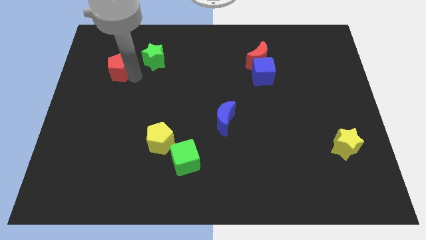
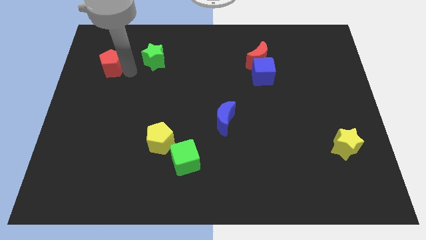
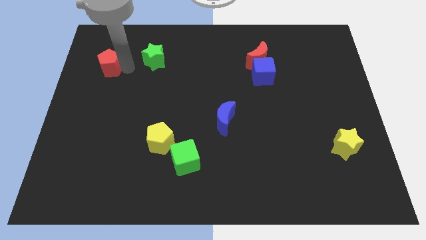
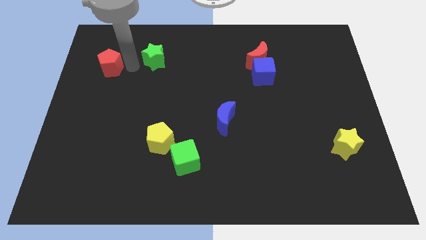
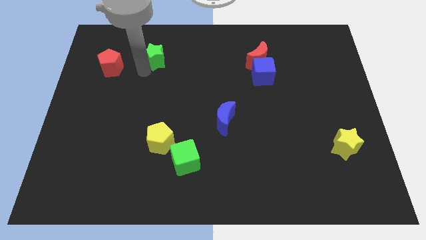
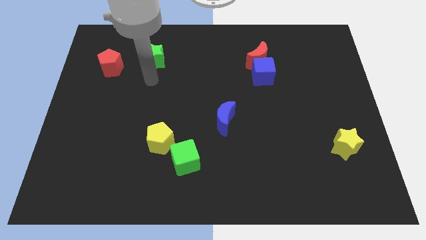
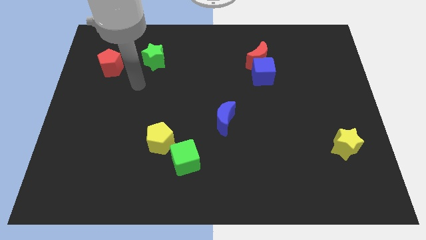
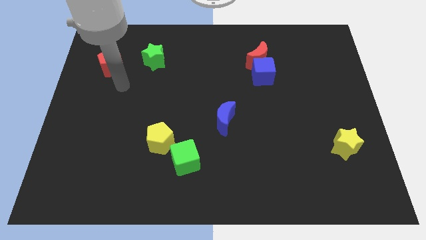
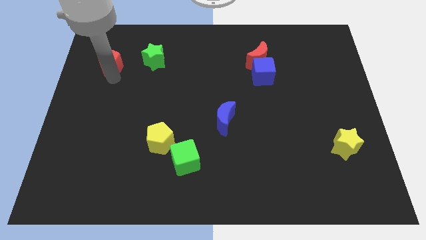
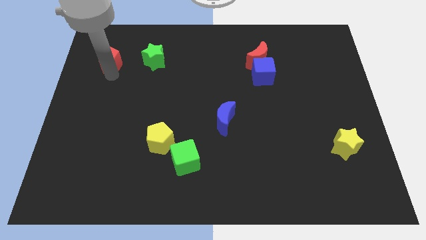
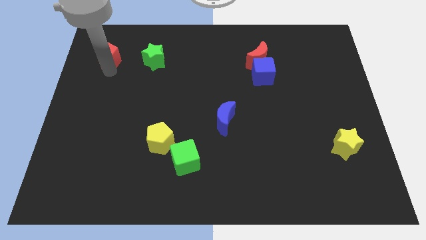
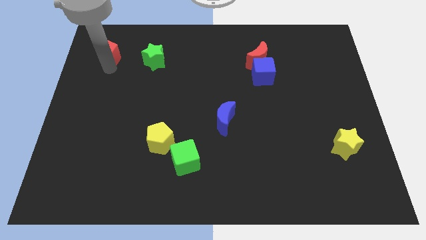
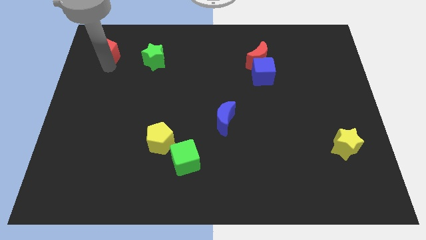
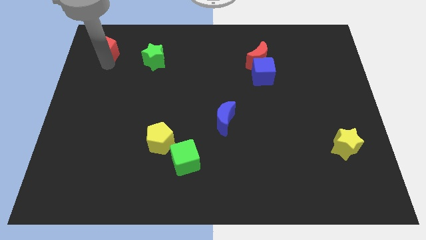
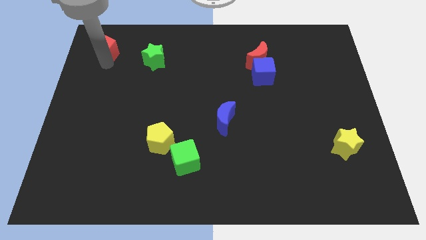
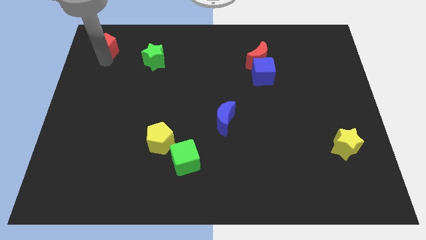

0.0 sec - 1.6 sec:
push the red pentagon slightly towards the top left side of the board

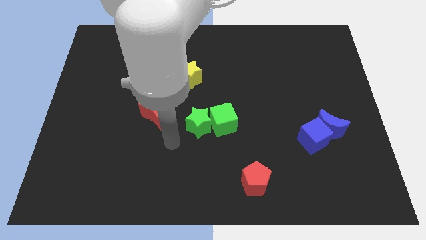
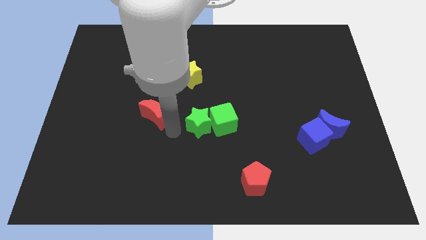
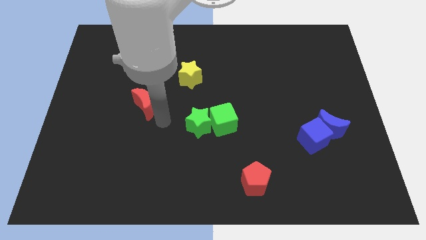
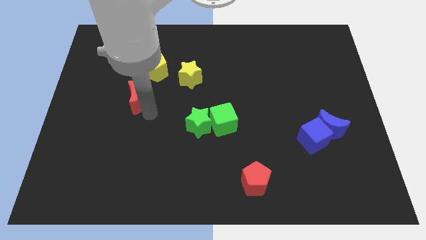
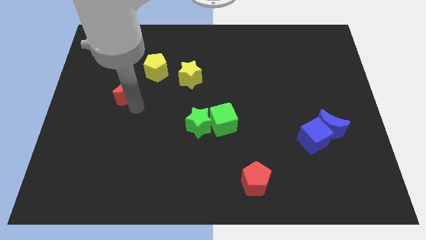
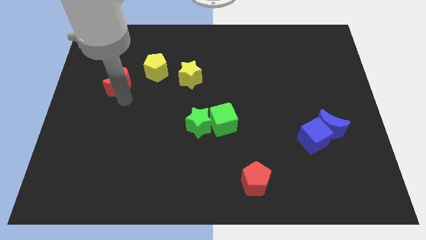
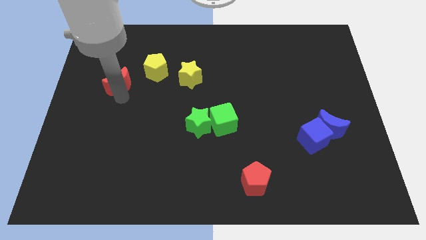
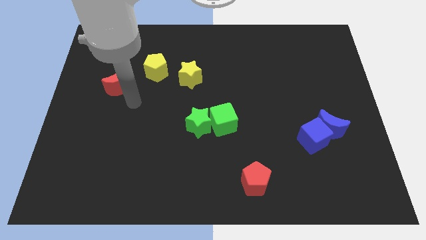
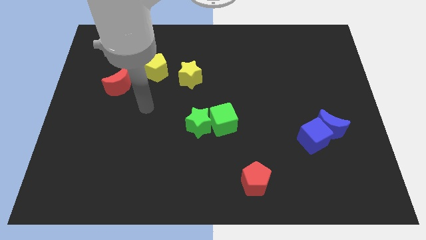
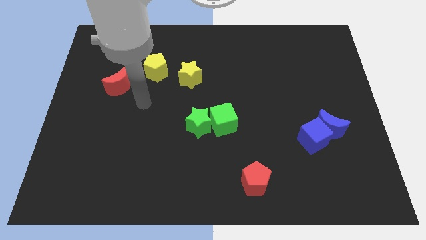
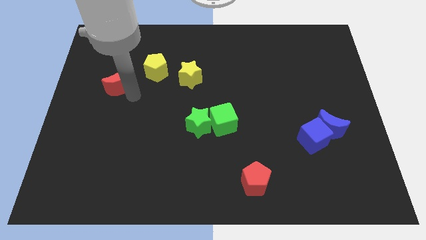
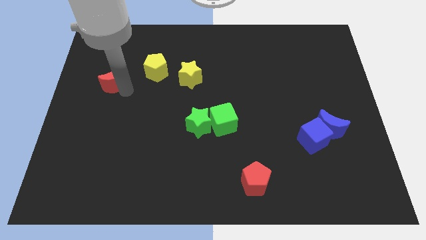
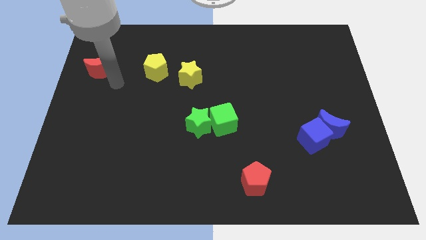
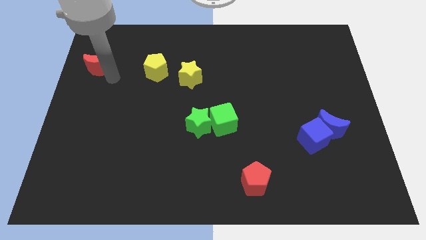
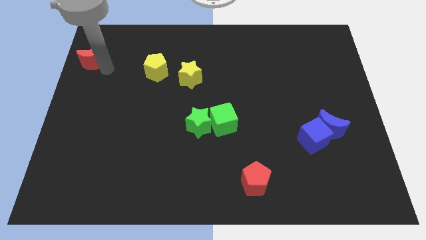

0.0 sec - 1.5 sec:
place the red moon to the parallel left of yellow pentagon

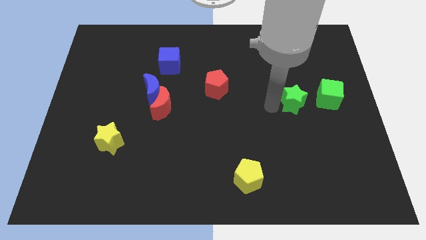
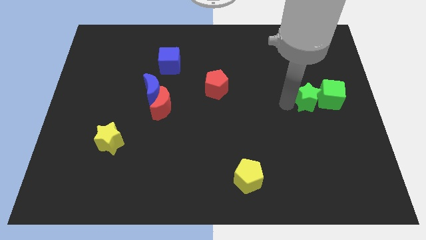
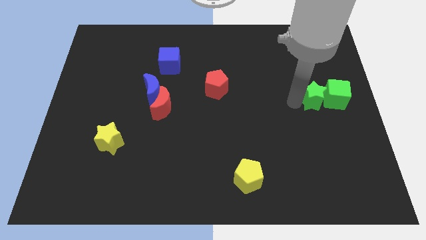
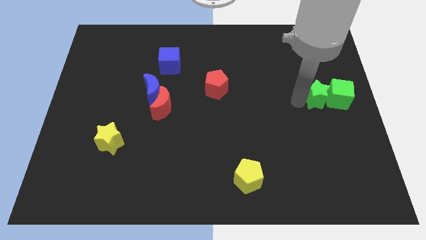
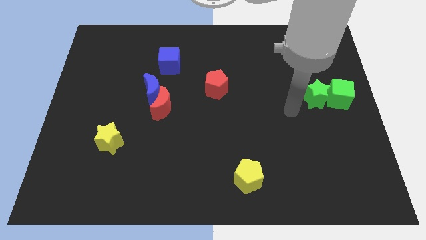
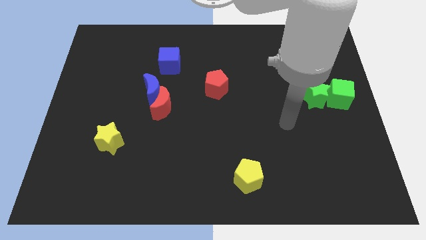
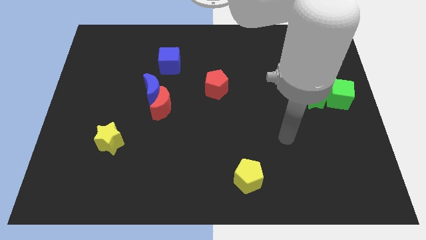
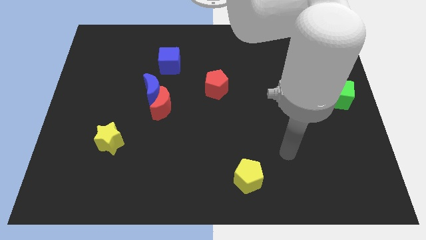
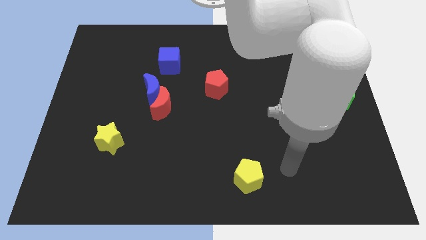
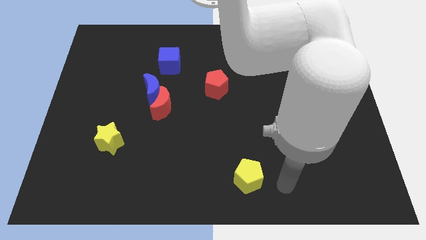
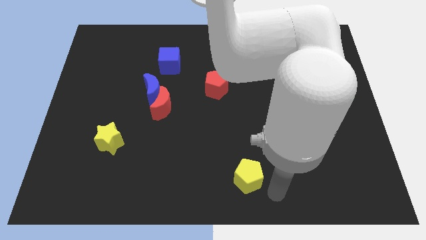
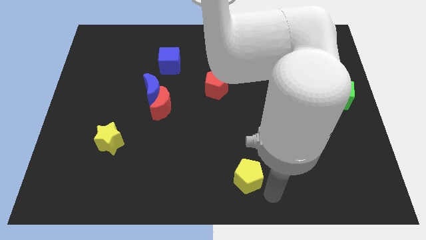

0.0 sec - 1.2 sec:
move the green blocks to the right center of the board

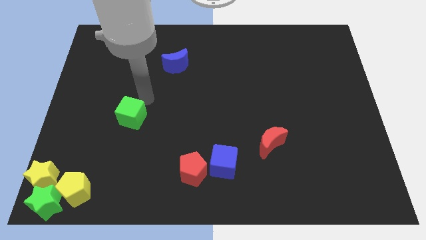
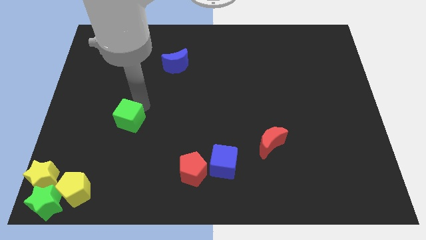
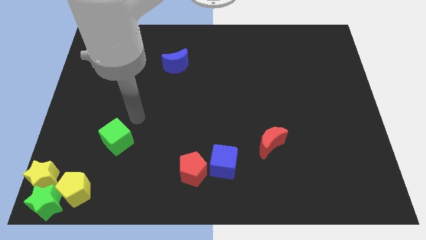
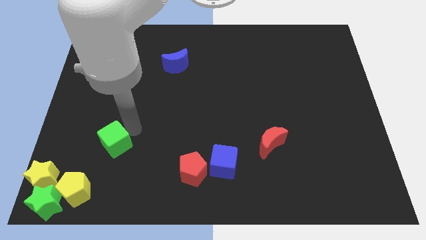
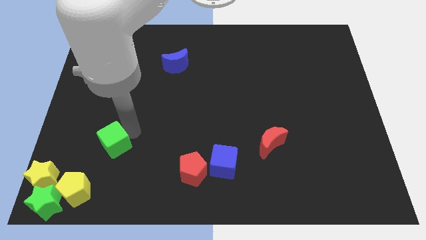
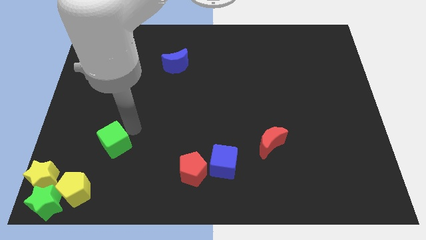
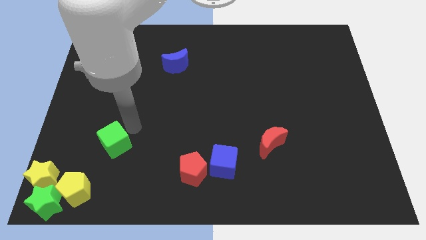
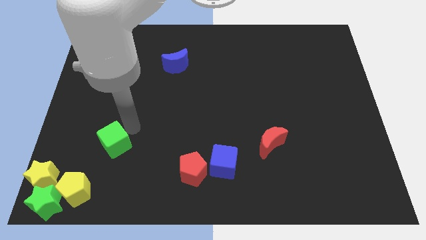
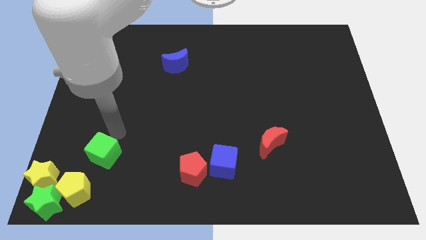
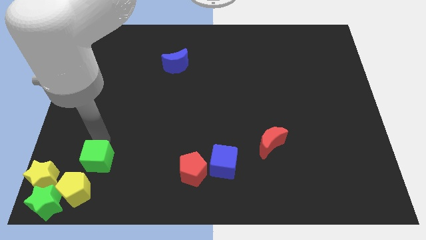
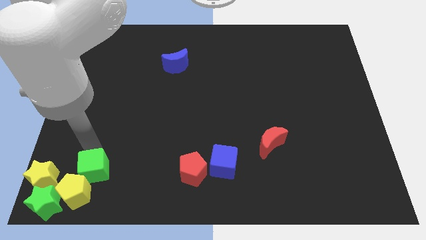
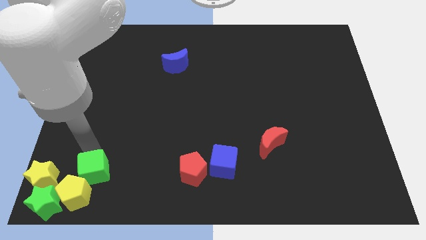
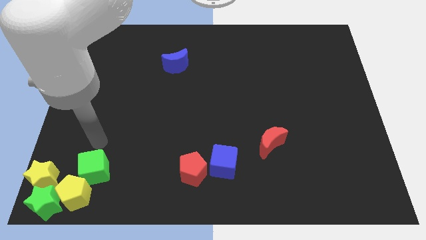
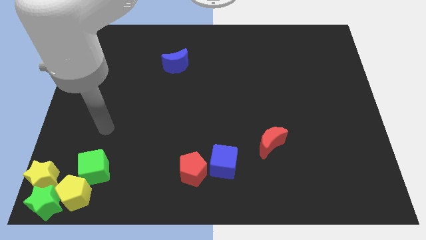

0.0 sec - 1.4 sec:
push green cube into group of blocks

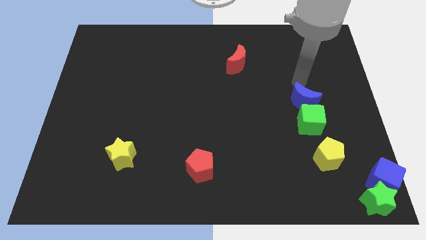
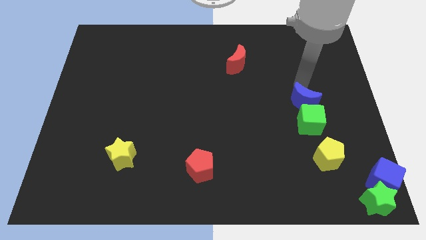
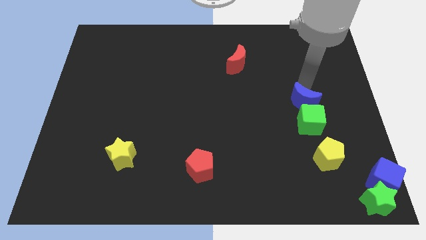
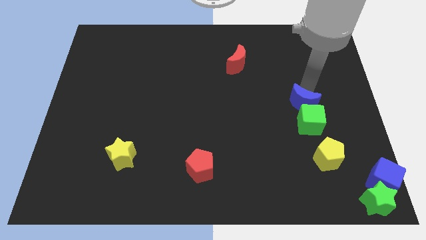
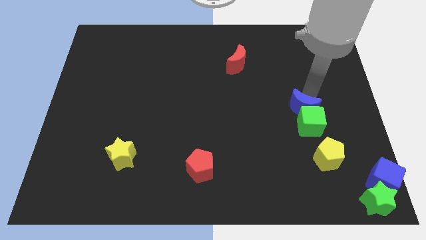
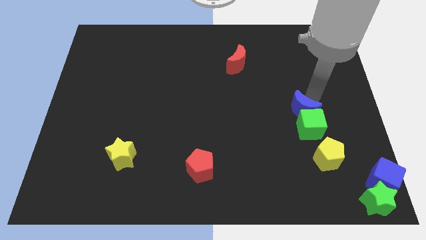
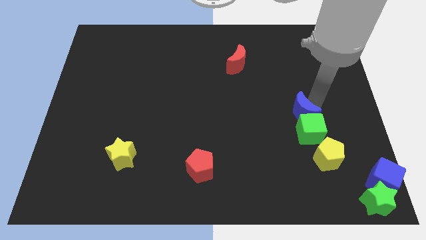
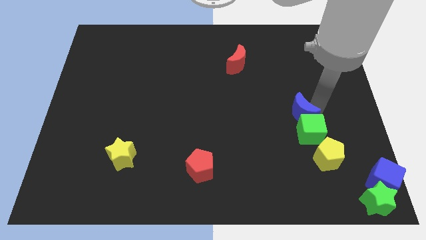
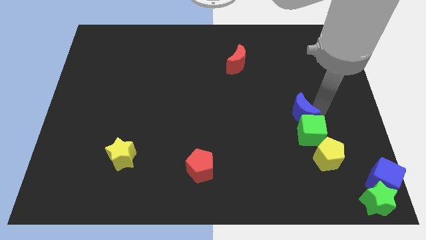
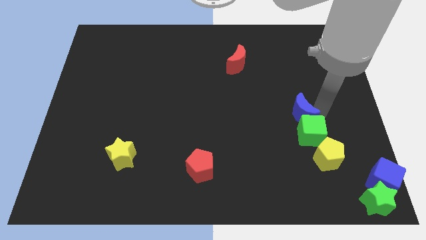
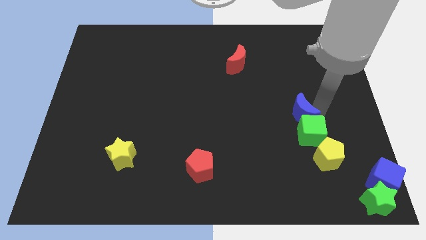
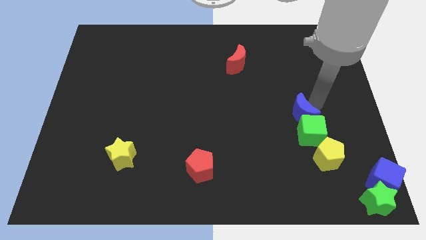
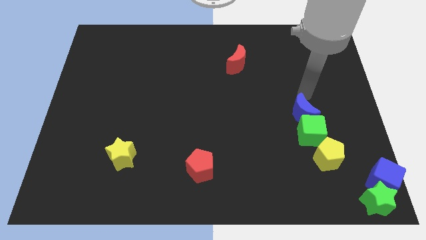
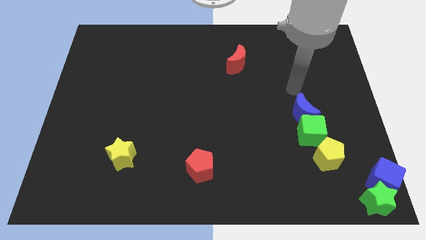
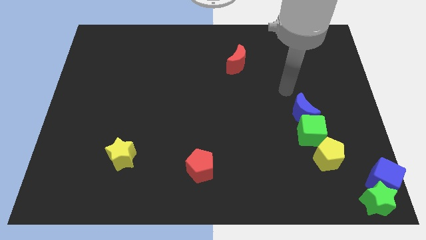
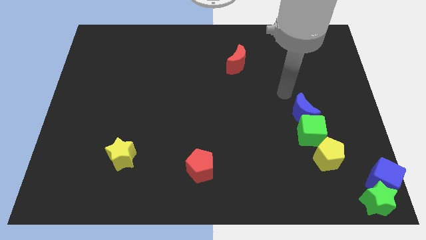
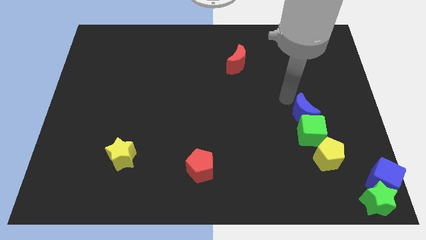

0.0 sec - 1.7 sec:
push the blue crescent into the green cube

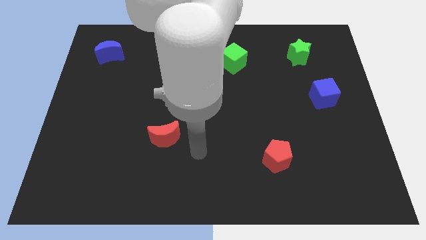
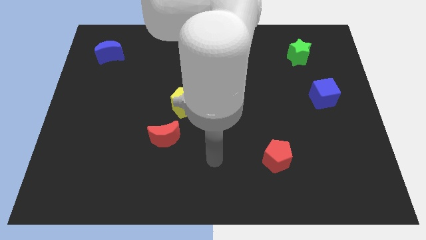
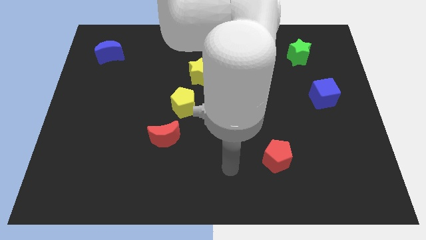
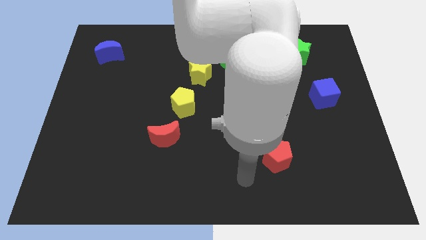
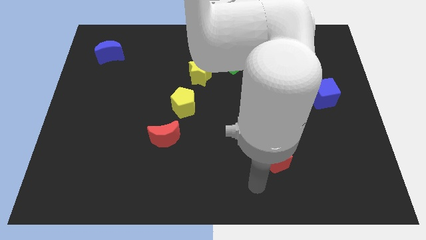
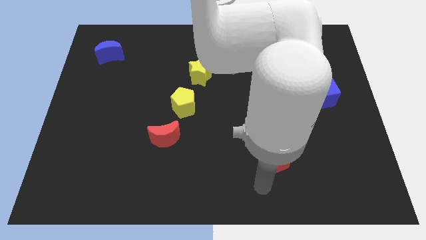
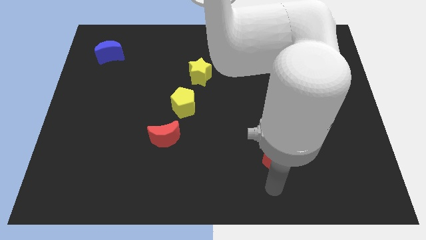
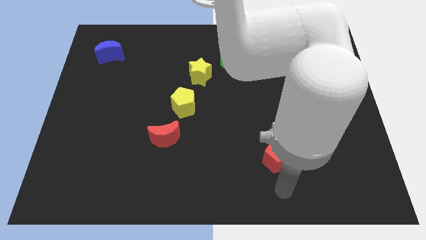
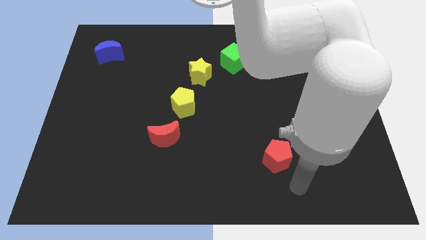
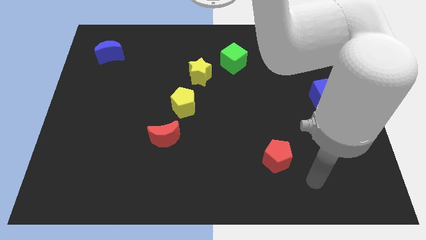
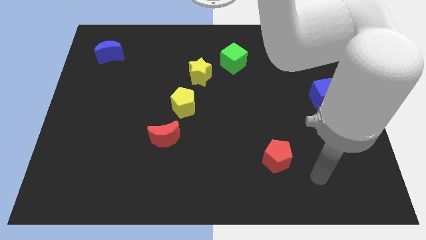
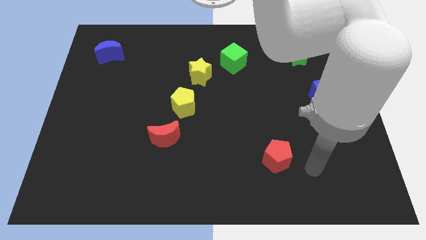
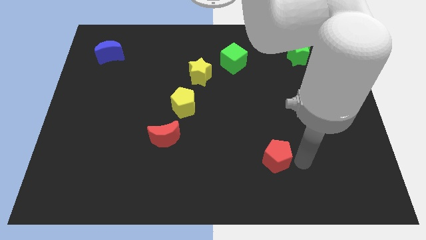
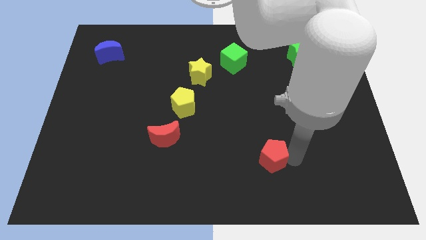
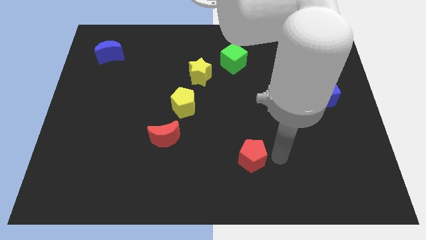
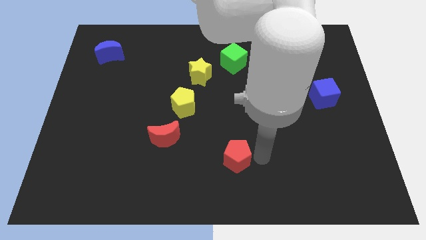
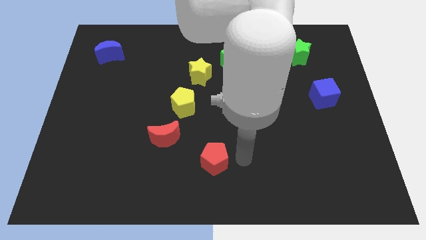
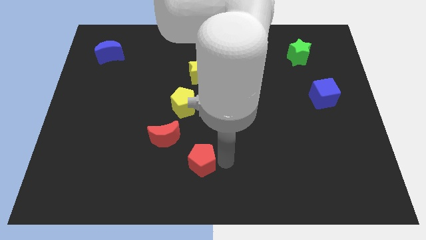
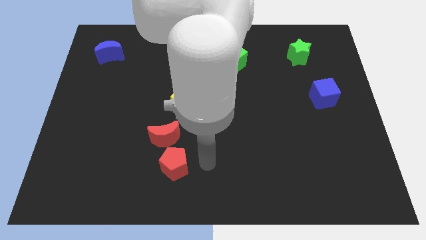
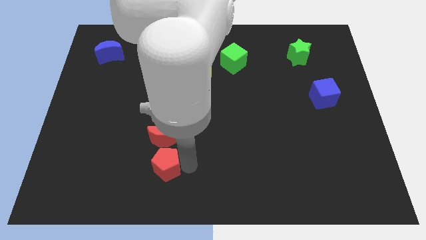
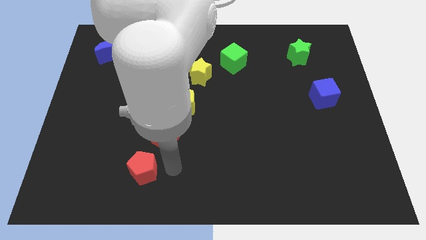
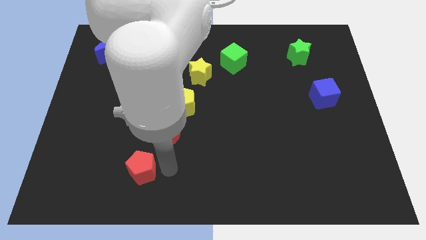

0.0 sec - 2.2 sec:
move the red pentagon to the bottom left of the red crescent
